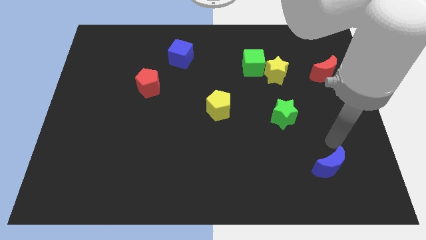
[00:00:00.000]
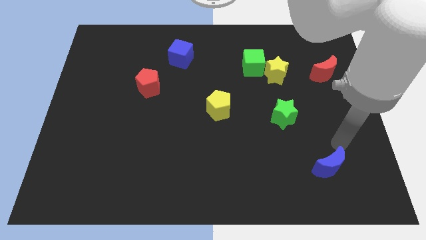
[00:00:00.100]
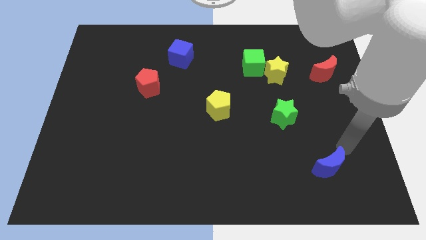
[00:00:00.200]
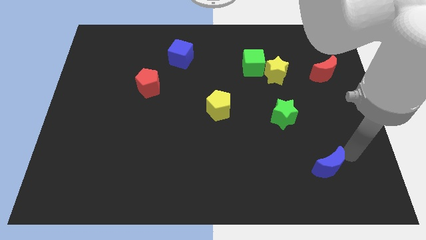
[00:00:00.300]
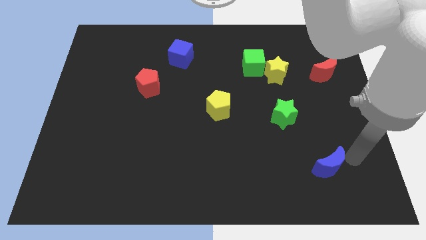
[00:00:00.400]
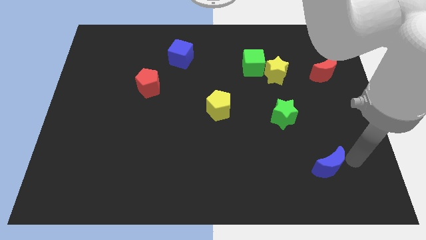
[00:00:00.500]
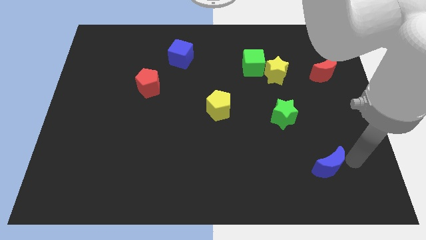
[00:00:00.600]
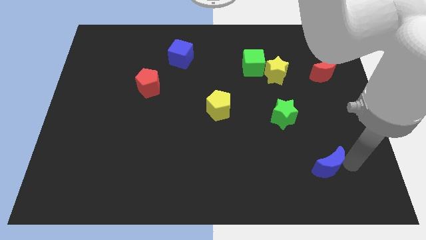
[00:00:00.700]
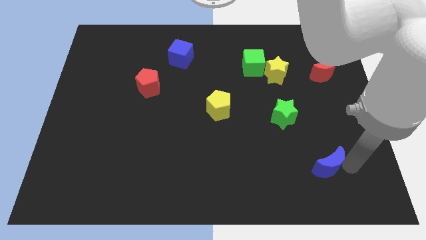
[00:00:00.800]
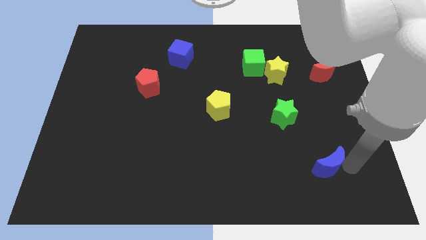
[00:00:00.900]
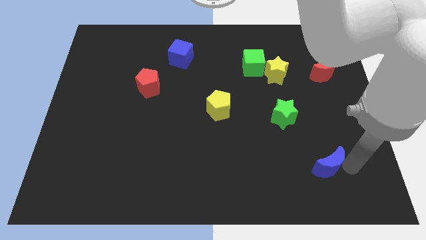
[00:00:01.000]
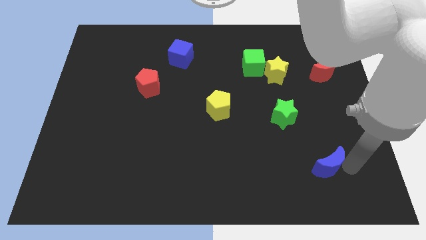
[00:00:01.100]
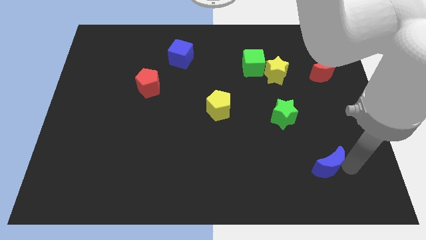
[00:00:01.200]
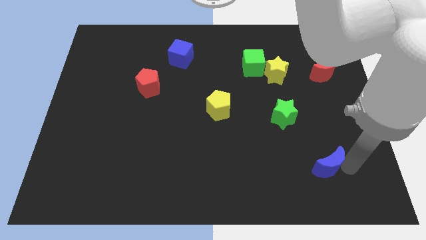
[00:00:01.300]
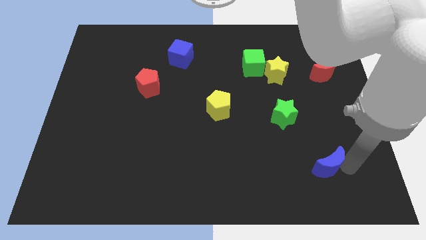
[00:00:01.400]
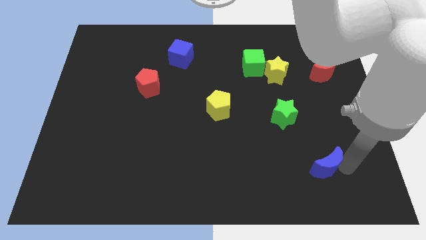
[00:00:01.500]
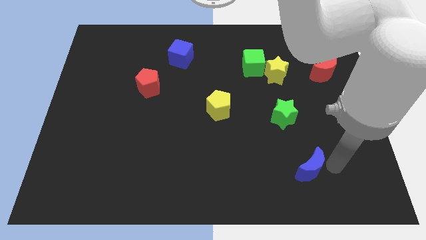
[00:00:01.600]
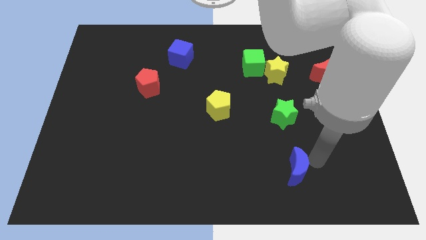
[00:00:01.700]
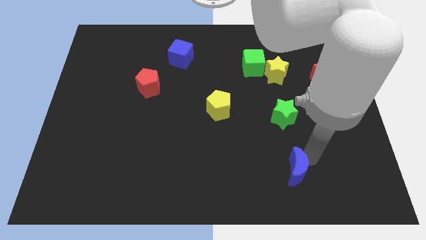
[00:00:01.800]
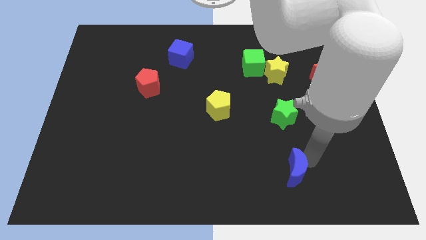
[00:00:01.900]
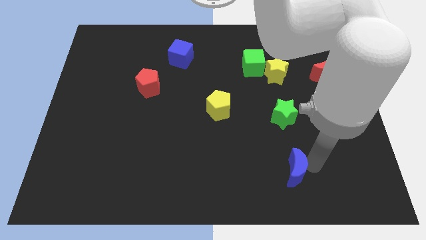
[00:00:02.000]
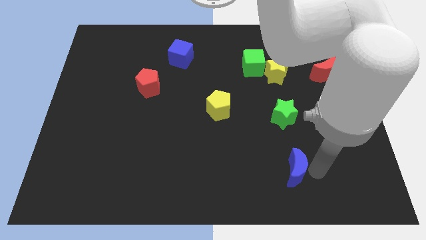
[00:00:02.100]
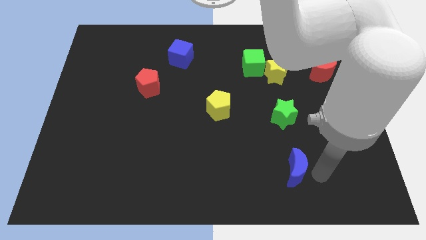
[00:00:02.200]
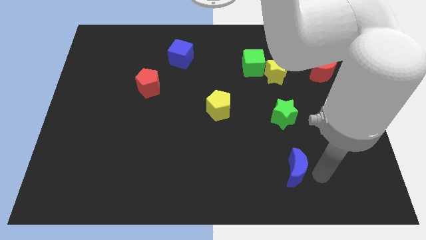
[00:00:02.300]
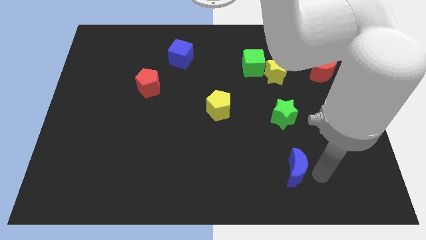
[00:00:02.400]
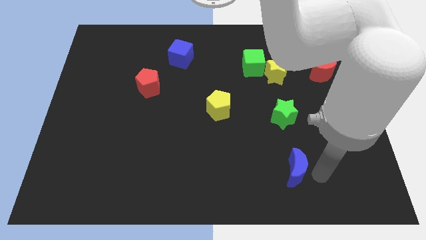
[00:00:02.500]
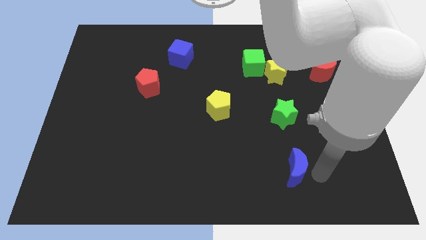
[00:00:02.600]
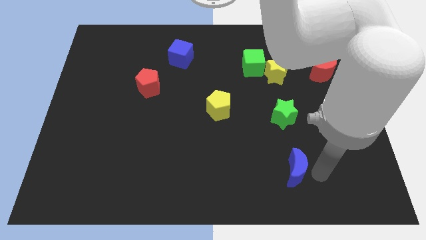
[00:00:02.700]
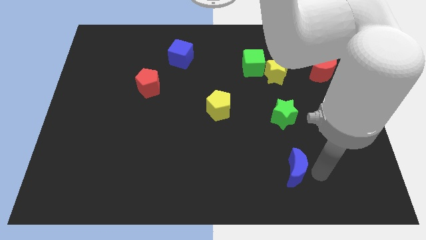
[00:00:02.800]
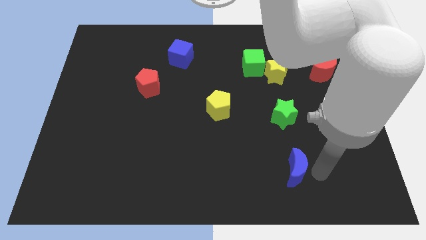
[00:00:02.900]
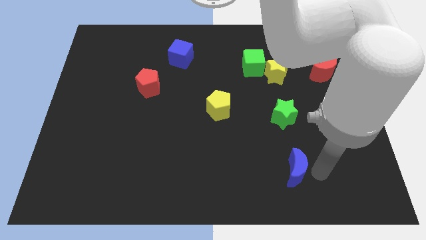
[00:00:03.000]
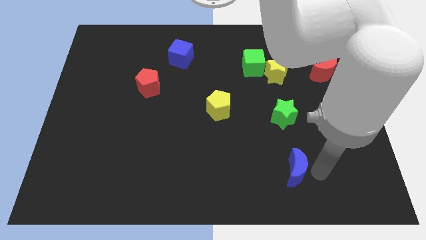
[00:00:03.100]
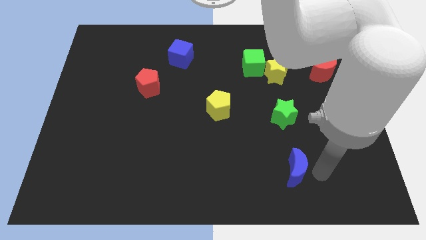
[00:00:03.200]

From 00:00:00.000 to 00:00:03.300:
push blue crescent to the bottom of green star

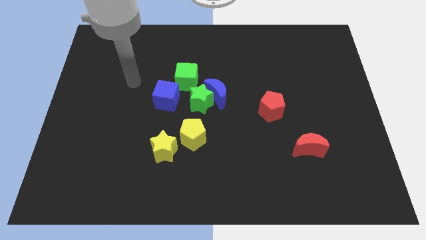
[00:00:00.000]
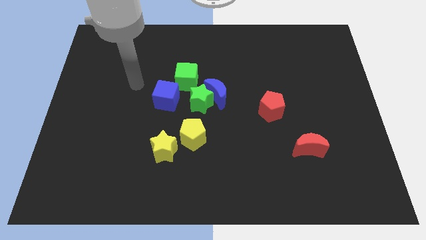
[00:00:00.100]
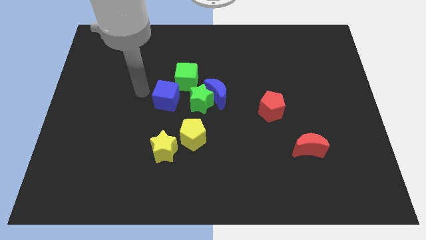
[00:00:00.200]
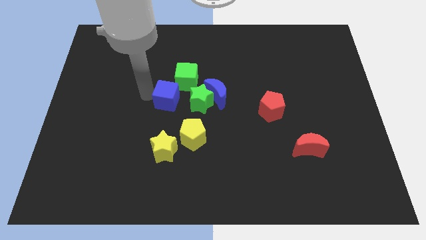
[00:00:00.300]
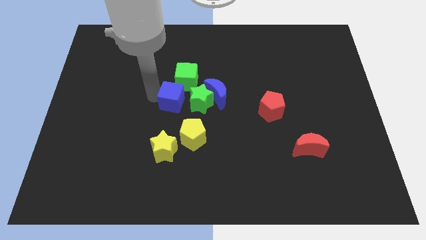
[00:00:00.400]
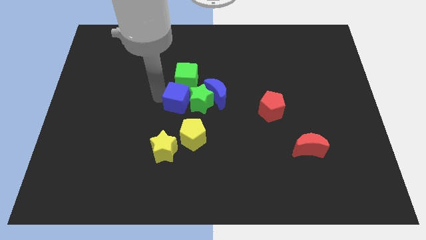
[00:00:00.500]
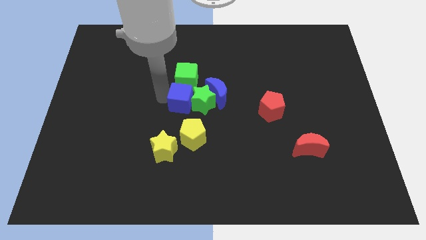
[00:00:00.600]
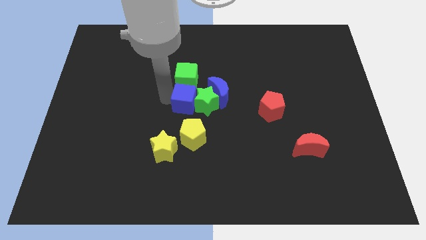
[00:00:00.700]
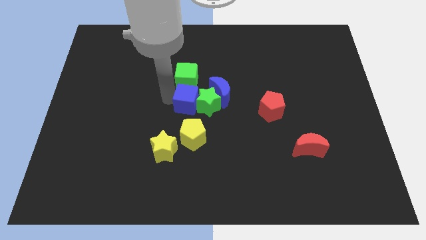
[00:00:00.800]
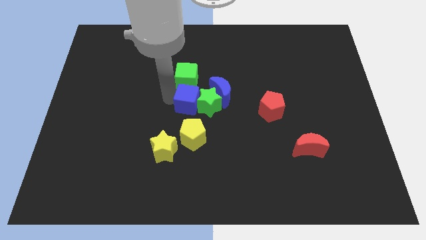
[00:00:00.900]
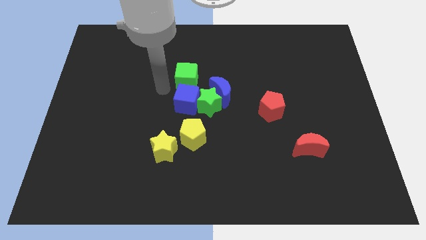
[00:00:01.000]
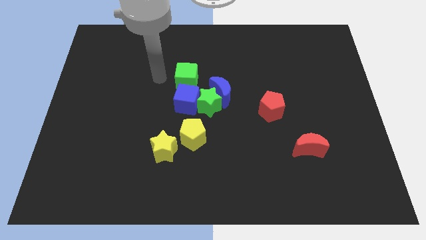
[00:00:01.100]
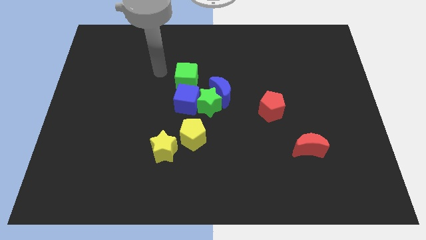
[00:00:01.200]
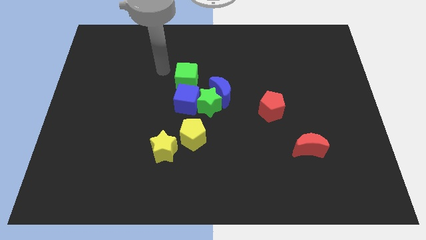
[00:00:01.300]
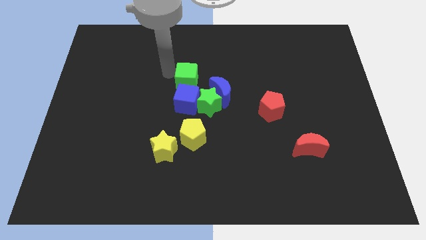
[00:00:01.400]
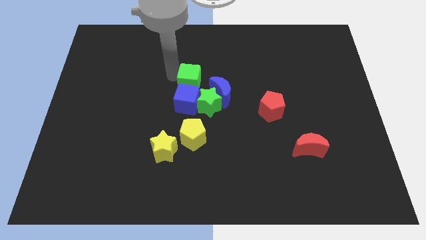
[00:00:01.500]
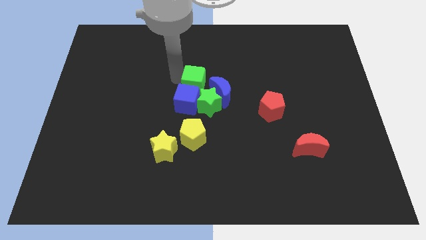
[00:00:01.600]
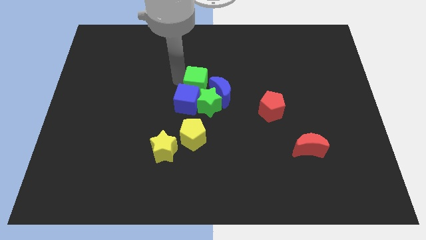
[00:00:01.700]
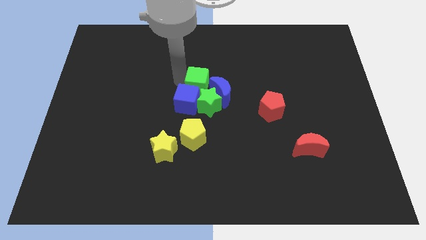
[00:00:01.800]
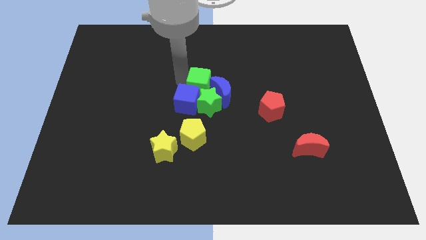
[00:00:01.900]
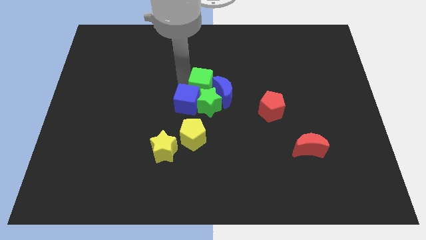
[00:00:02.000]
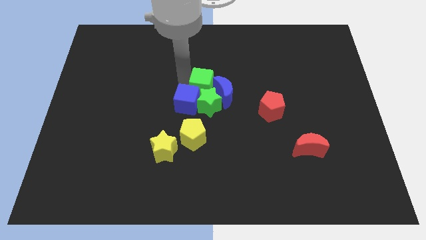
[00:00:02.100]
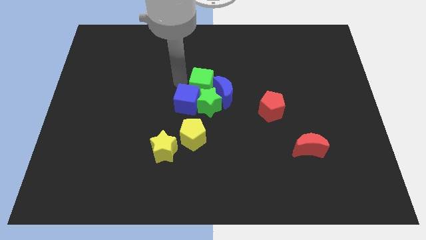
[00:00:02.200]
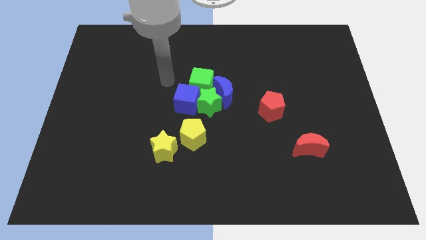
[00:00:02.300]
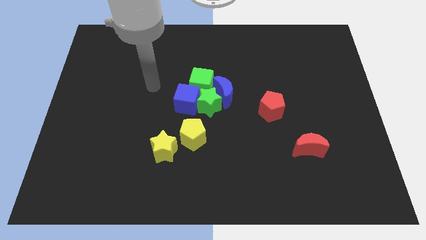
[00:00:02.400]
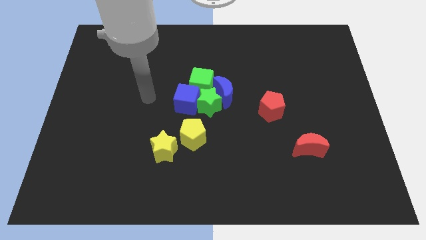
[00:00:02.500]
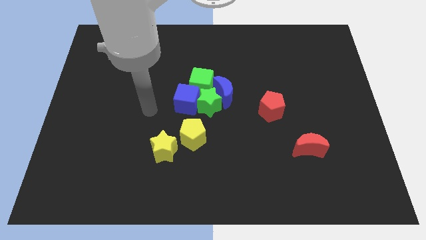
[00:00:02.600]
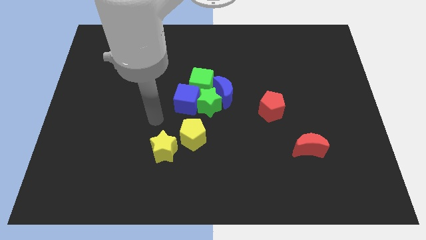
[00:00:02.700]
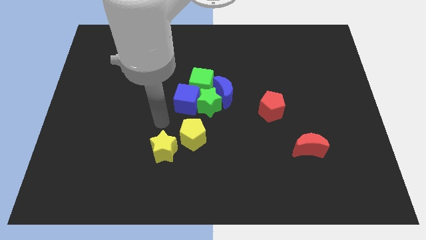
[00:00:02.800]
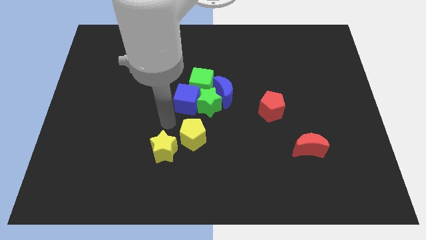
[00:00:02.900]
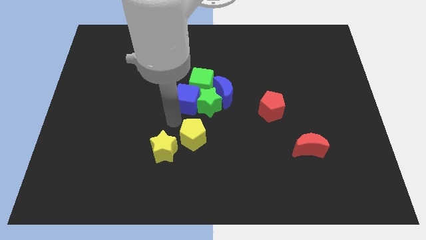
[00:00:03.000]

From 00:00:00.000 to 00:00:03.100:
place green cube to the top right of blue cube

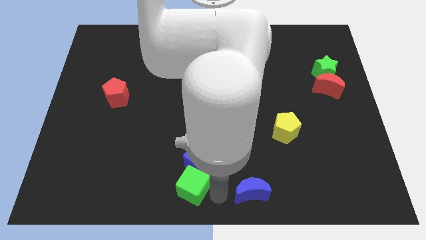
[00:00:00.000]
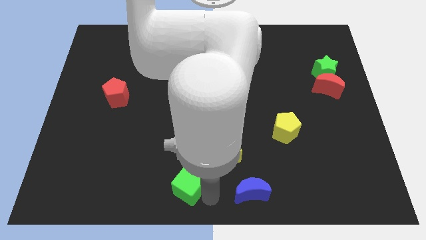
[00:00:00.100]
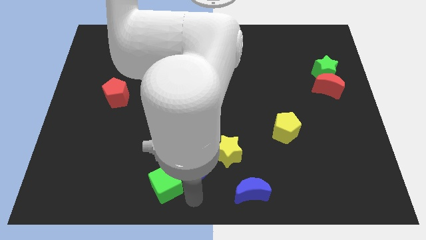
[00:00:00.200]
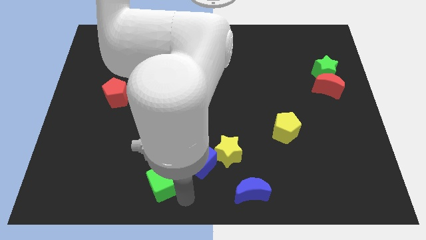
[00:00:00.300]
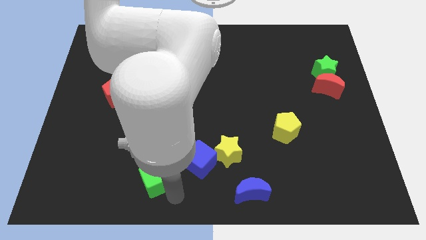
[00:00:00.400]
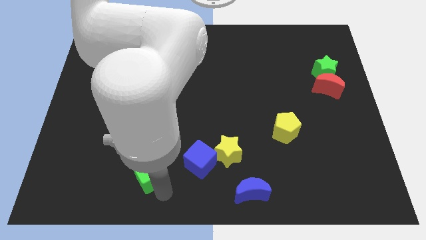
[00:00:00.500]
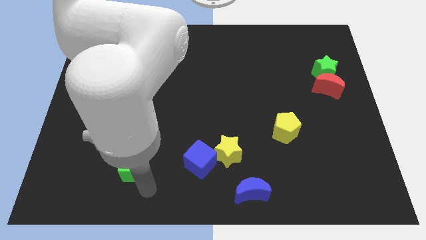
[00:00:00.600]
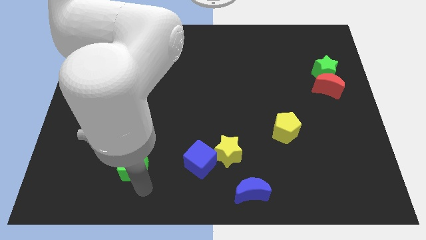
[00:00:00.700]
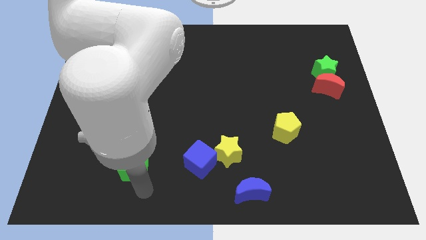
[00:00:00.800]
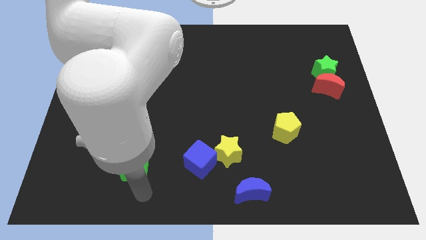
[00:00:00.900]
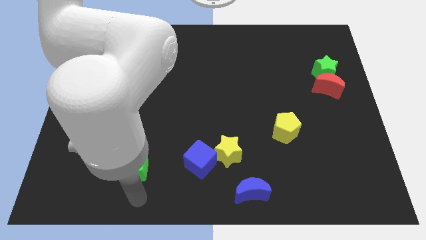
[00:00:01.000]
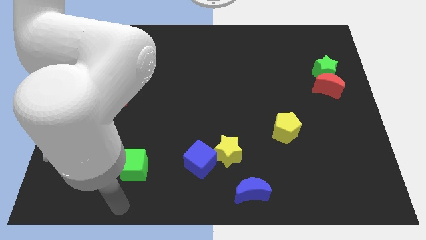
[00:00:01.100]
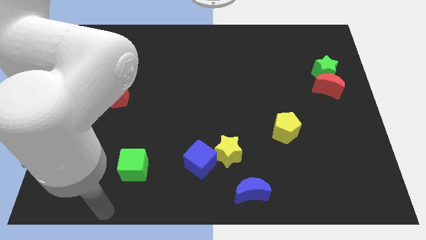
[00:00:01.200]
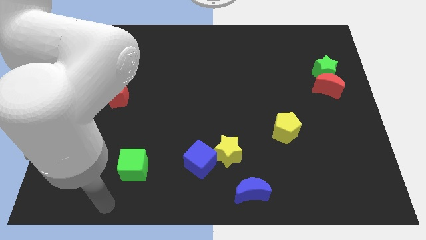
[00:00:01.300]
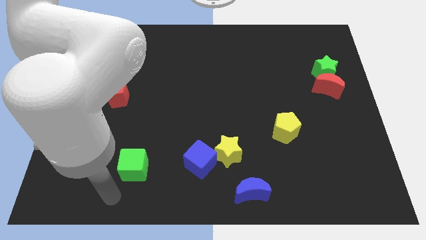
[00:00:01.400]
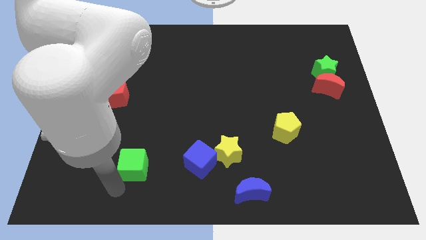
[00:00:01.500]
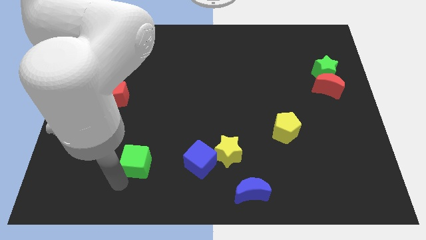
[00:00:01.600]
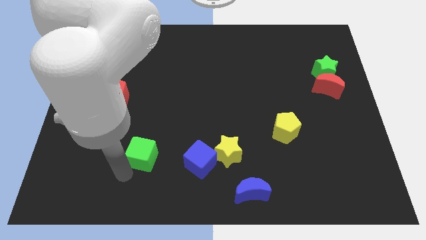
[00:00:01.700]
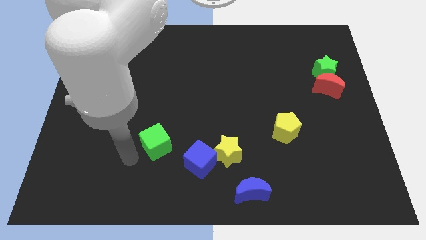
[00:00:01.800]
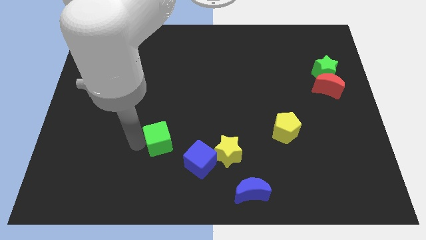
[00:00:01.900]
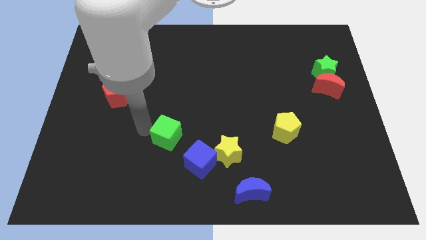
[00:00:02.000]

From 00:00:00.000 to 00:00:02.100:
move the green square to the upwards

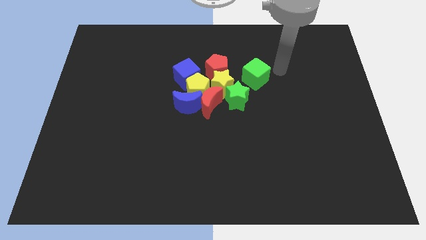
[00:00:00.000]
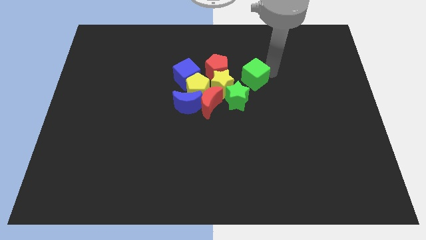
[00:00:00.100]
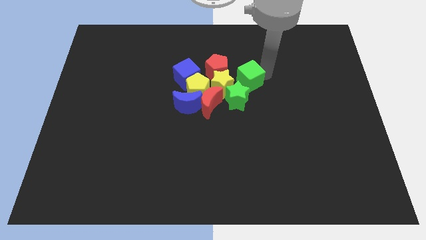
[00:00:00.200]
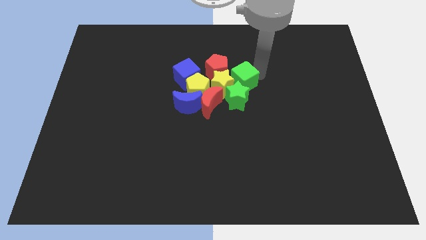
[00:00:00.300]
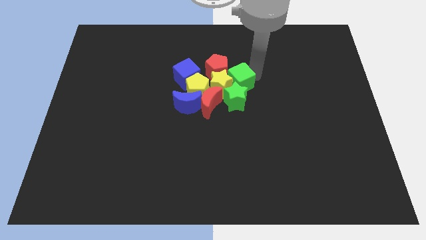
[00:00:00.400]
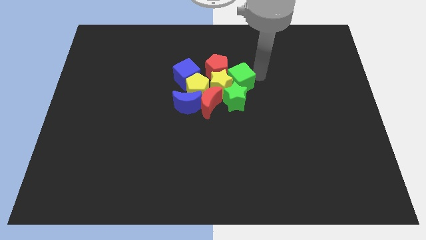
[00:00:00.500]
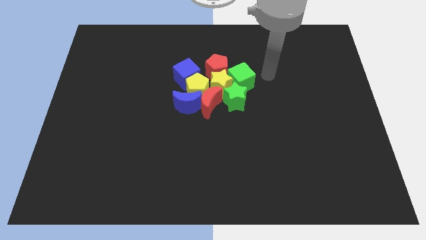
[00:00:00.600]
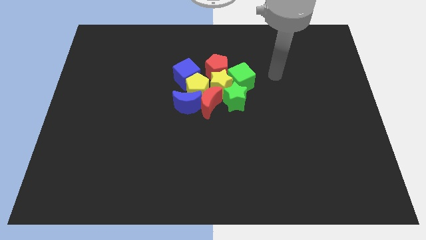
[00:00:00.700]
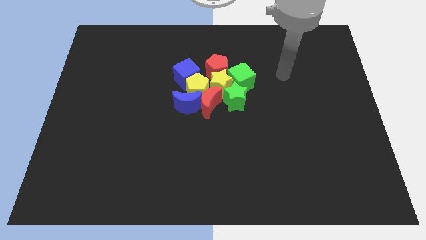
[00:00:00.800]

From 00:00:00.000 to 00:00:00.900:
push the green cube close to the yellow star
